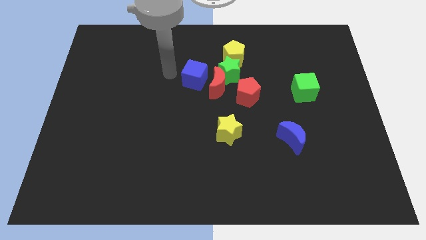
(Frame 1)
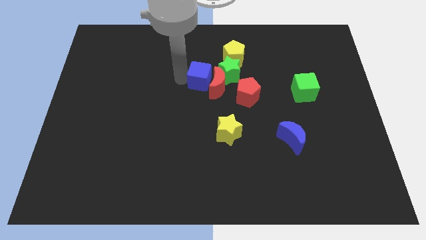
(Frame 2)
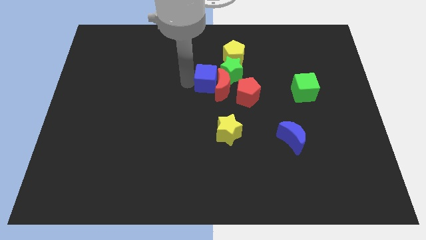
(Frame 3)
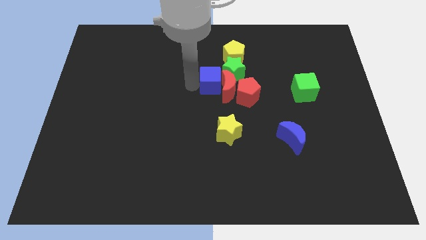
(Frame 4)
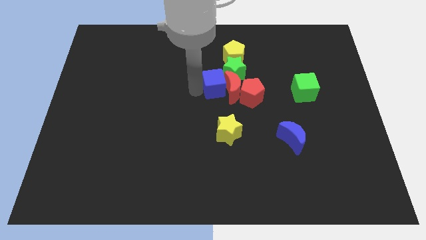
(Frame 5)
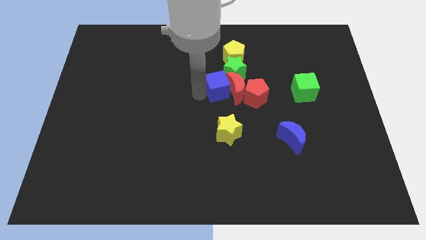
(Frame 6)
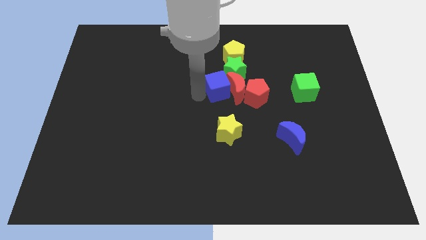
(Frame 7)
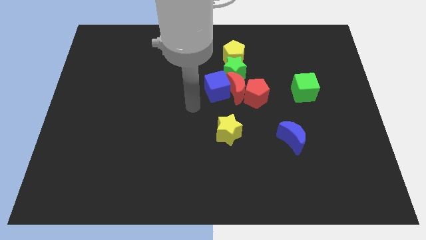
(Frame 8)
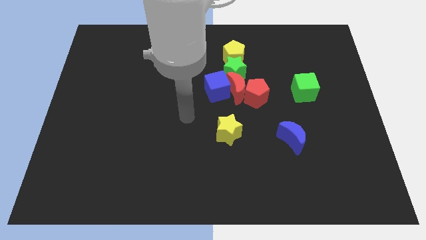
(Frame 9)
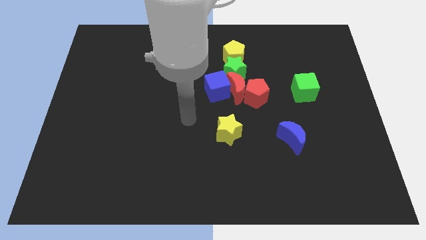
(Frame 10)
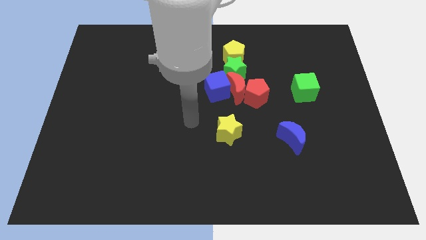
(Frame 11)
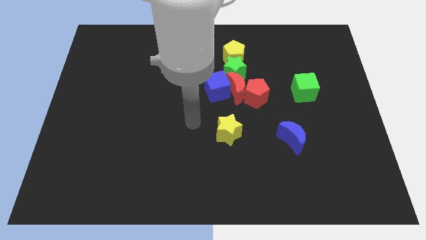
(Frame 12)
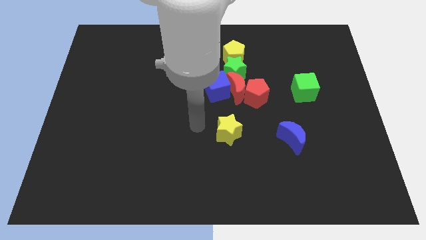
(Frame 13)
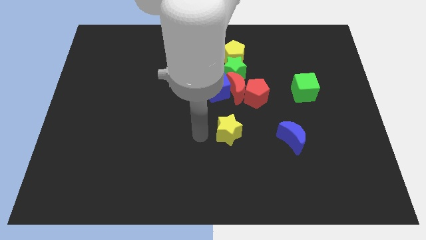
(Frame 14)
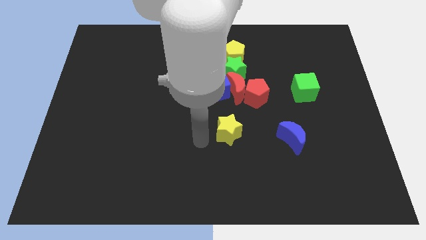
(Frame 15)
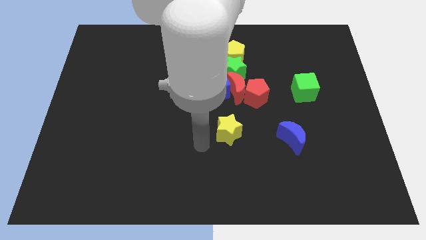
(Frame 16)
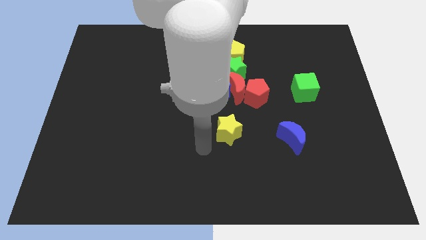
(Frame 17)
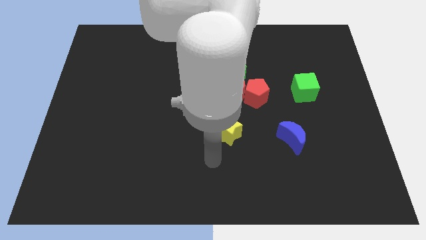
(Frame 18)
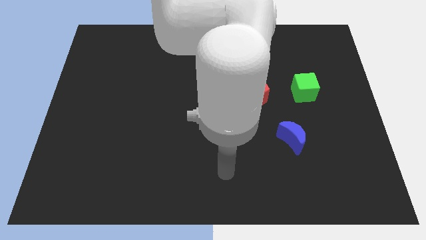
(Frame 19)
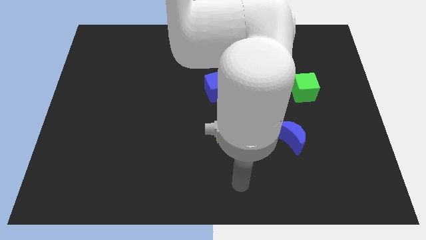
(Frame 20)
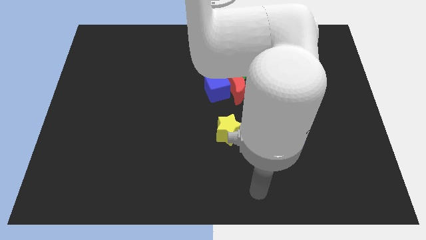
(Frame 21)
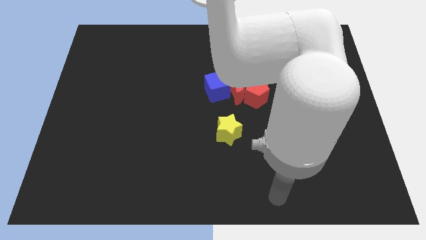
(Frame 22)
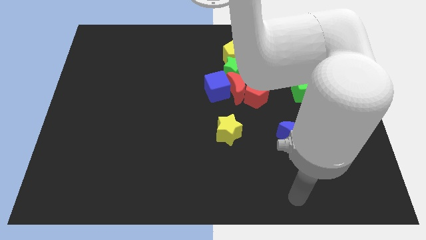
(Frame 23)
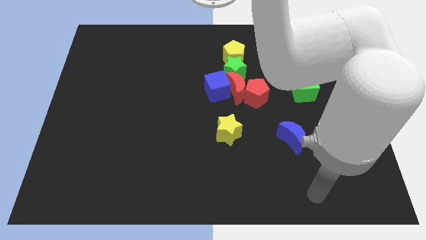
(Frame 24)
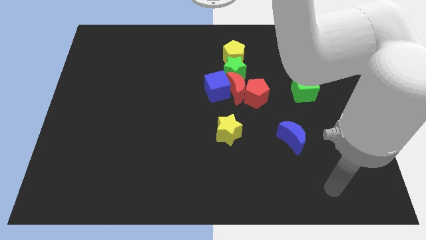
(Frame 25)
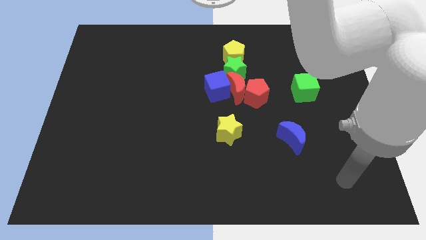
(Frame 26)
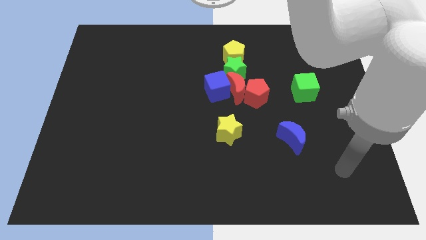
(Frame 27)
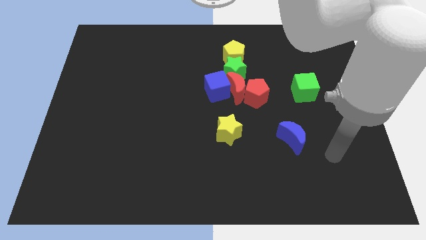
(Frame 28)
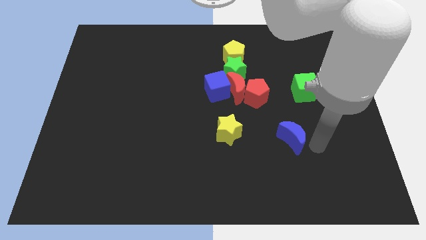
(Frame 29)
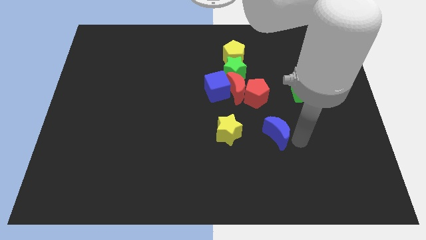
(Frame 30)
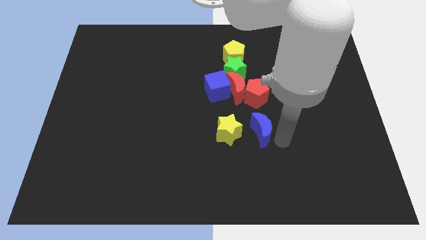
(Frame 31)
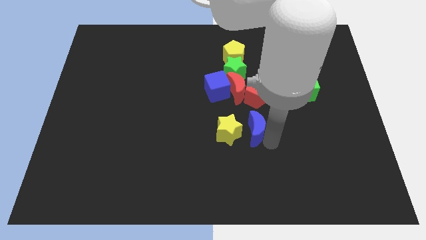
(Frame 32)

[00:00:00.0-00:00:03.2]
push the red crescent into the red pentagon using the blue cube

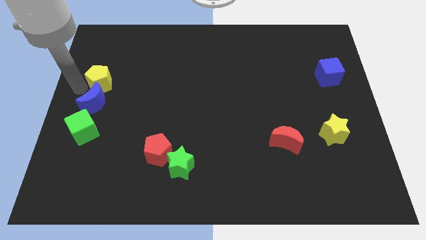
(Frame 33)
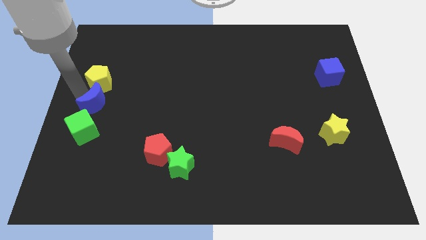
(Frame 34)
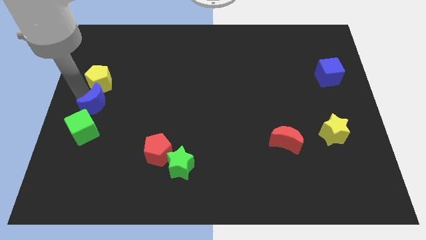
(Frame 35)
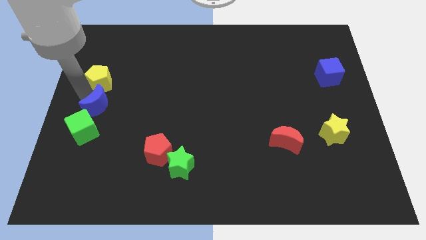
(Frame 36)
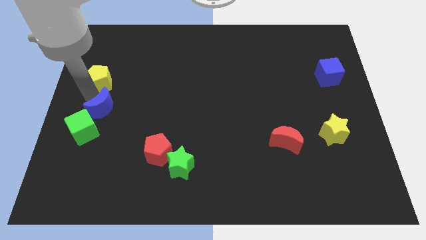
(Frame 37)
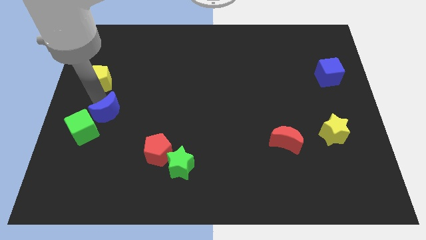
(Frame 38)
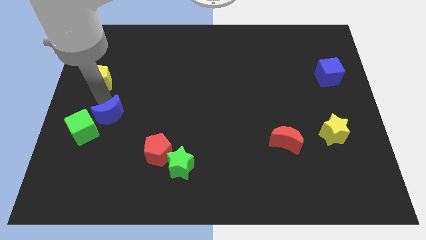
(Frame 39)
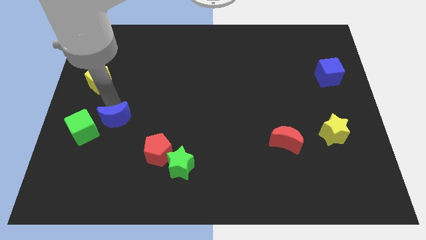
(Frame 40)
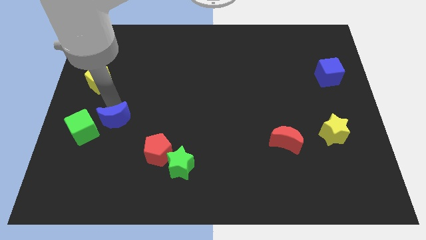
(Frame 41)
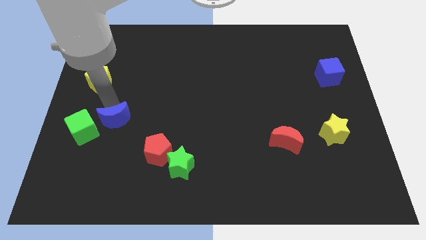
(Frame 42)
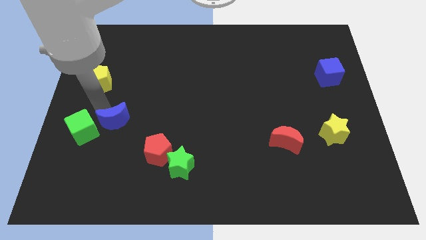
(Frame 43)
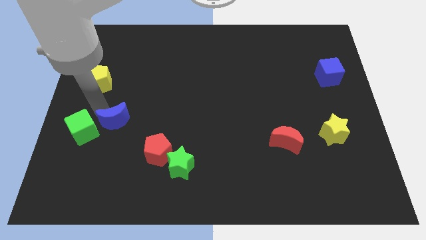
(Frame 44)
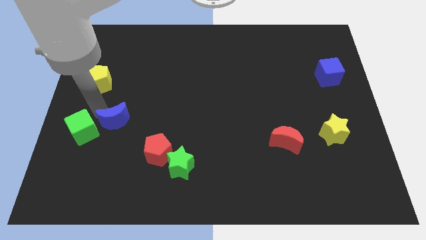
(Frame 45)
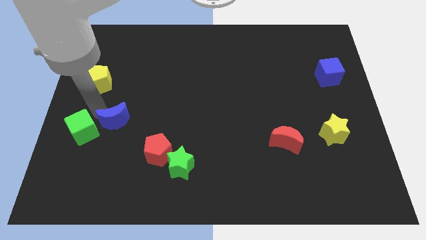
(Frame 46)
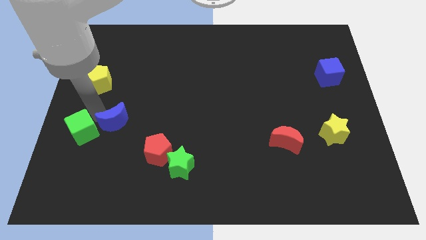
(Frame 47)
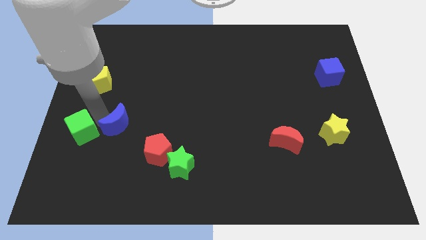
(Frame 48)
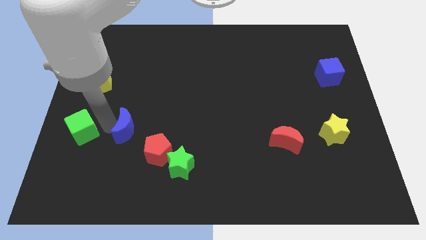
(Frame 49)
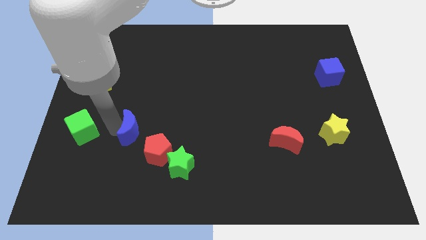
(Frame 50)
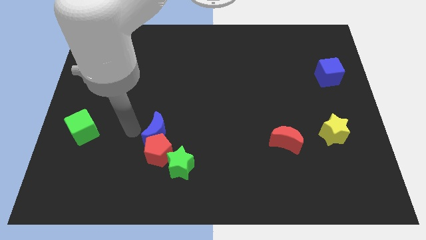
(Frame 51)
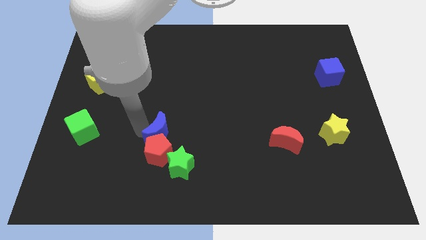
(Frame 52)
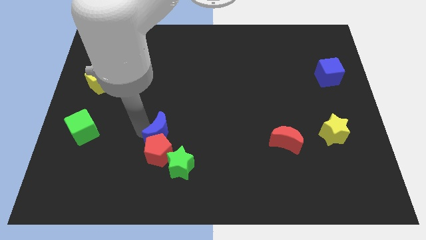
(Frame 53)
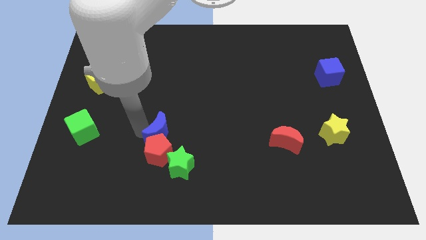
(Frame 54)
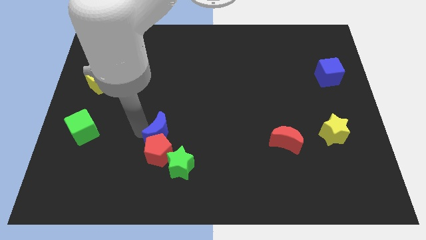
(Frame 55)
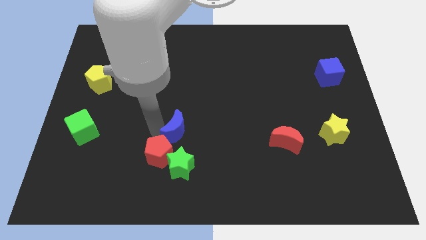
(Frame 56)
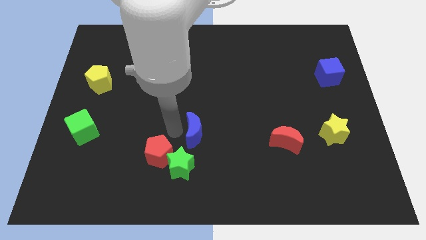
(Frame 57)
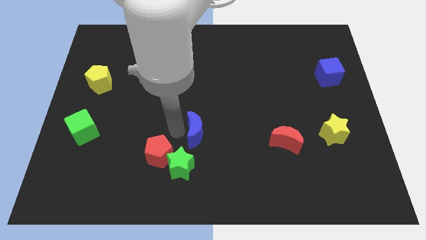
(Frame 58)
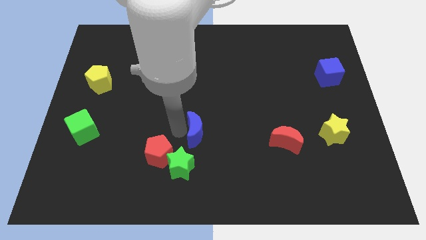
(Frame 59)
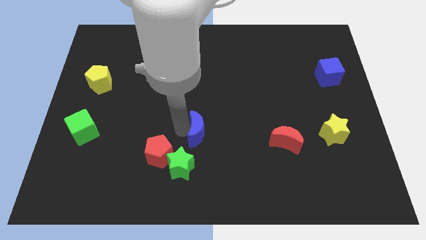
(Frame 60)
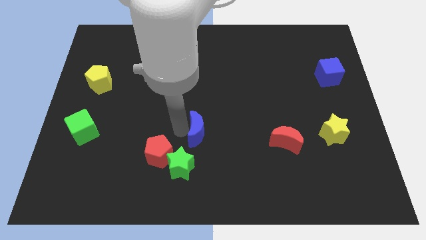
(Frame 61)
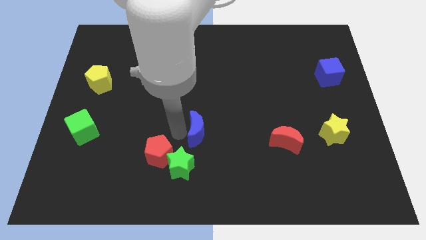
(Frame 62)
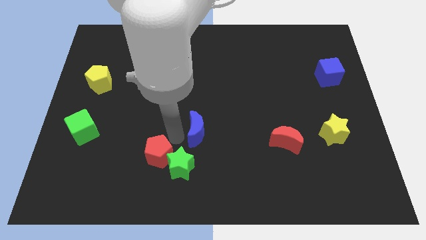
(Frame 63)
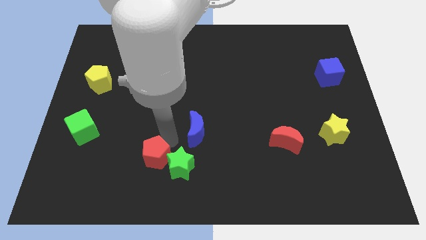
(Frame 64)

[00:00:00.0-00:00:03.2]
slide the blue crescent towards the bottom center of the board

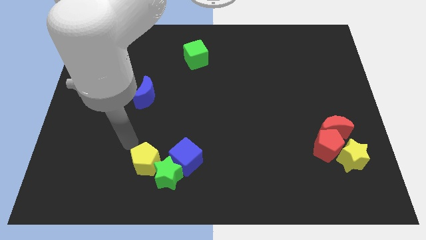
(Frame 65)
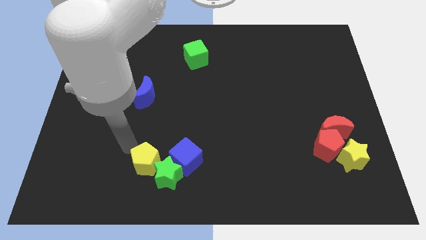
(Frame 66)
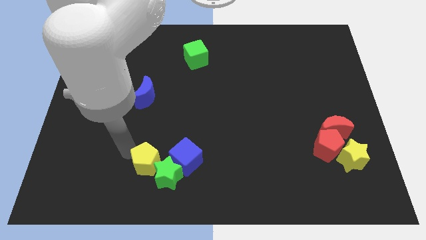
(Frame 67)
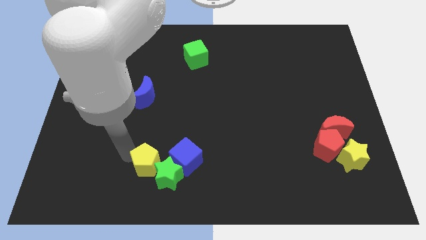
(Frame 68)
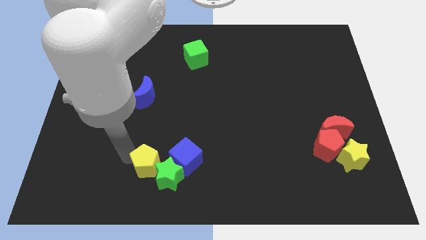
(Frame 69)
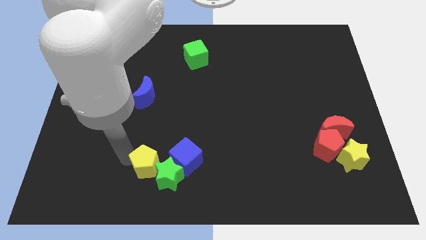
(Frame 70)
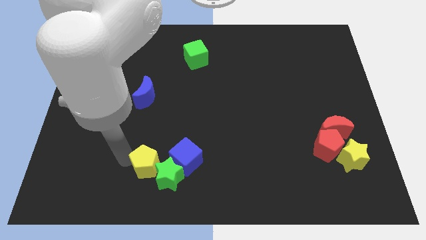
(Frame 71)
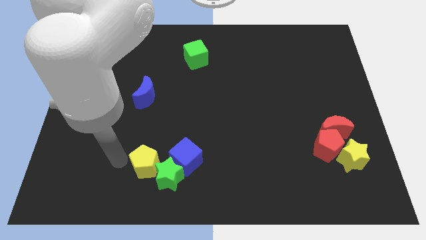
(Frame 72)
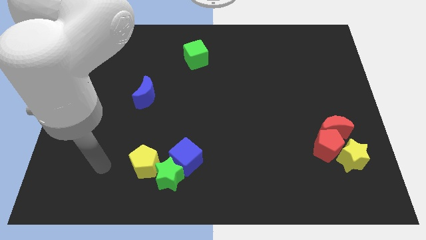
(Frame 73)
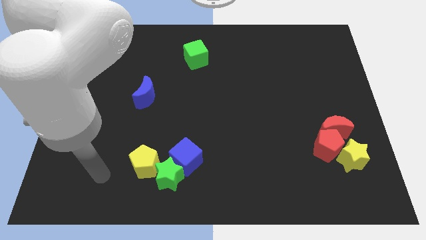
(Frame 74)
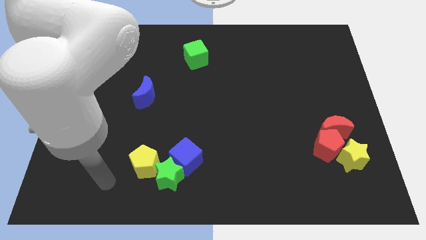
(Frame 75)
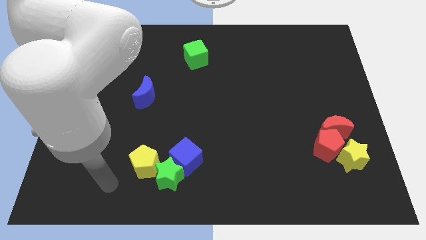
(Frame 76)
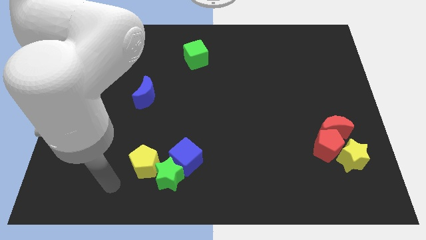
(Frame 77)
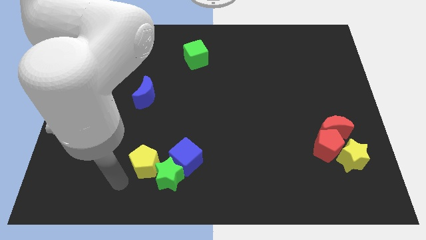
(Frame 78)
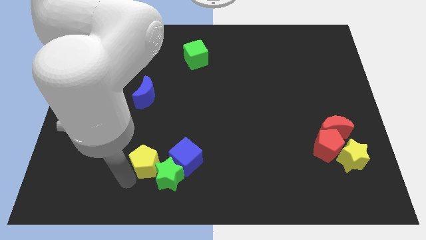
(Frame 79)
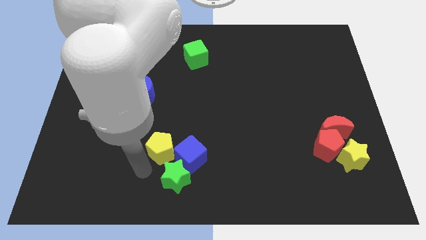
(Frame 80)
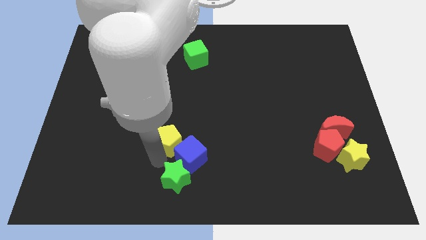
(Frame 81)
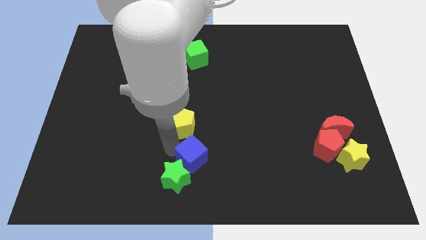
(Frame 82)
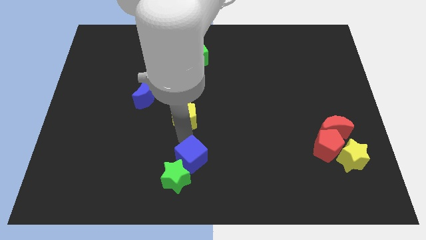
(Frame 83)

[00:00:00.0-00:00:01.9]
push the yellow pentagon to the top of the blue cube

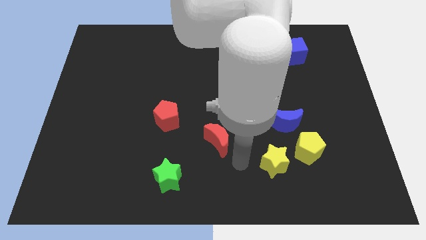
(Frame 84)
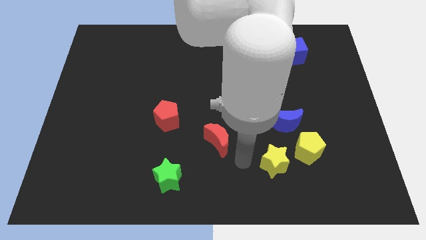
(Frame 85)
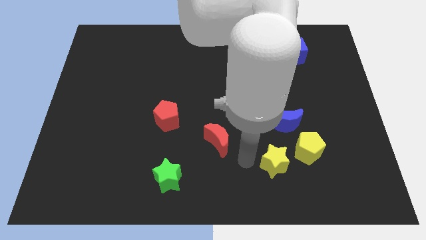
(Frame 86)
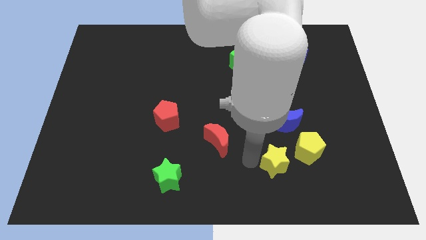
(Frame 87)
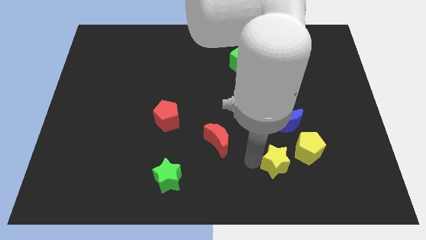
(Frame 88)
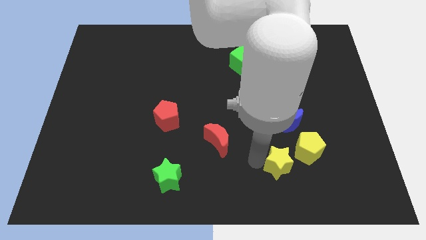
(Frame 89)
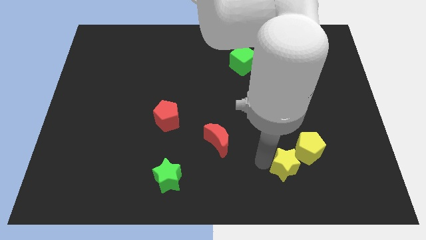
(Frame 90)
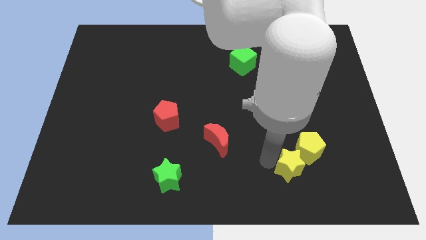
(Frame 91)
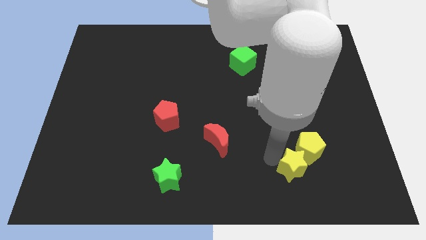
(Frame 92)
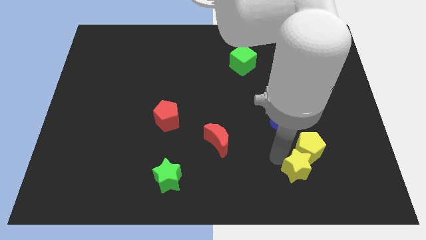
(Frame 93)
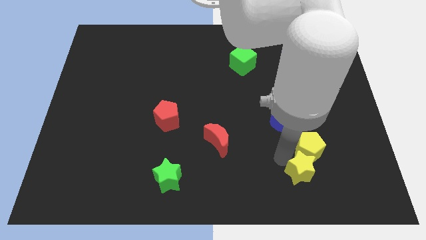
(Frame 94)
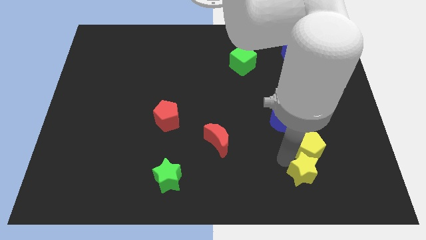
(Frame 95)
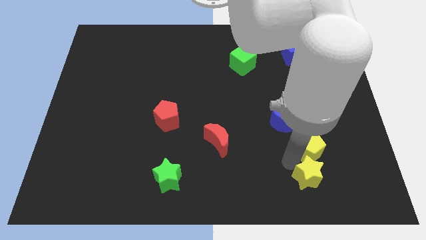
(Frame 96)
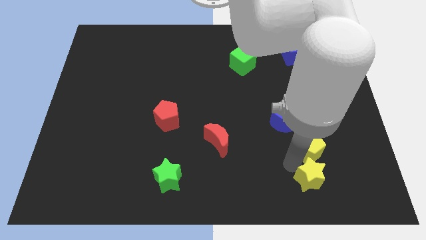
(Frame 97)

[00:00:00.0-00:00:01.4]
move yellow star to the bottom of the yellow pentagon
